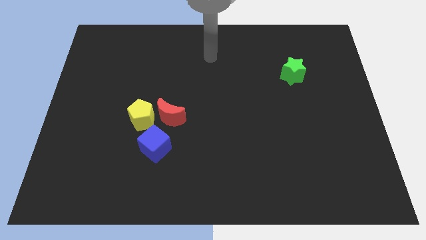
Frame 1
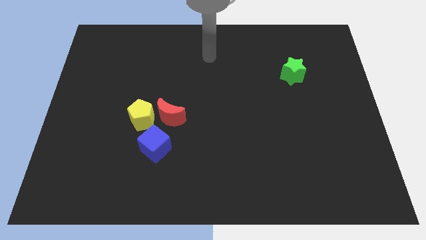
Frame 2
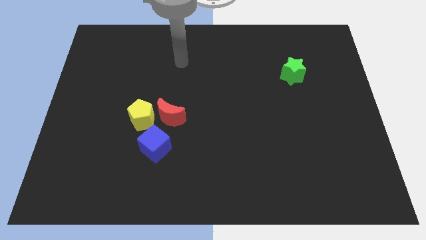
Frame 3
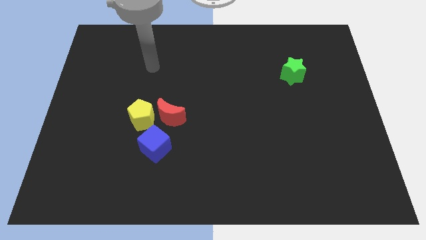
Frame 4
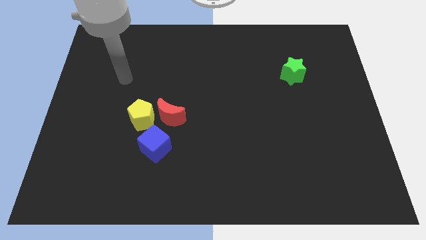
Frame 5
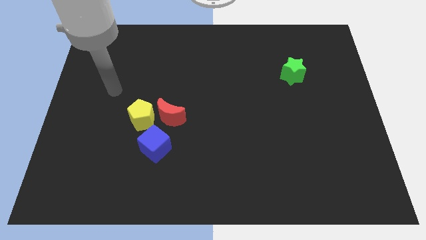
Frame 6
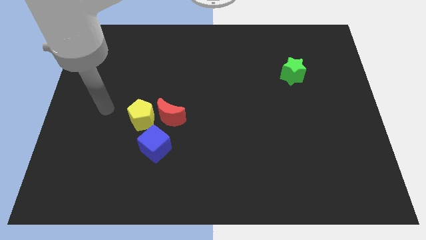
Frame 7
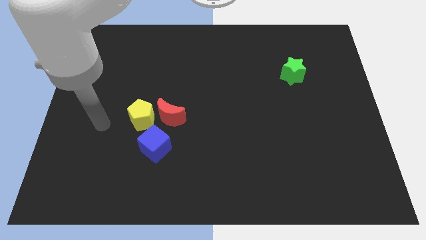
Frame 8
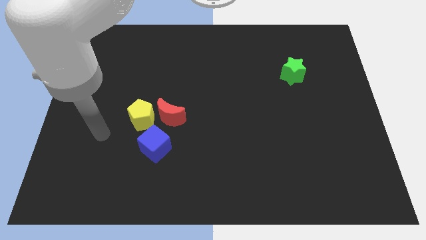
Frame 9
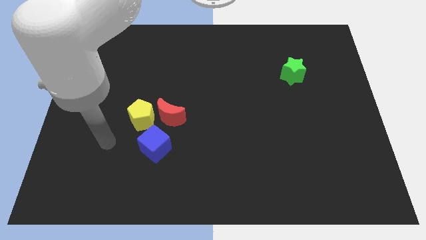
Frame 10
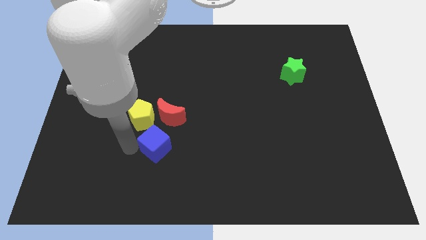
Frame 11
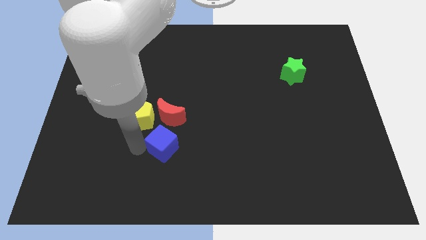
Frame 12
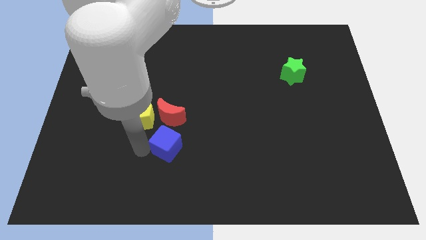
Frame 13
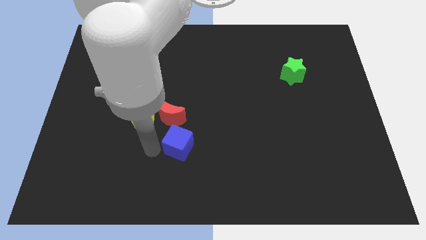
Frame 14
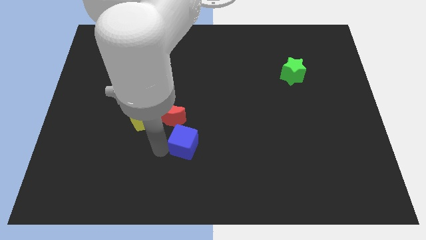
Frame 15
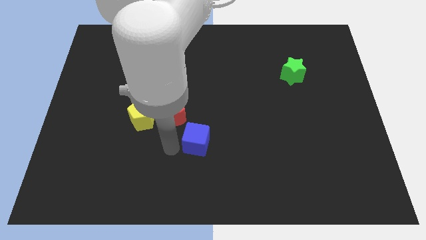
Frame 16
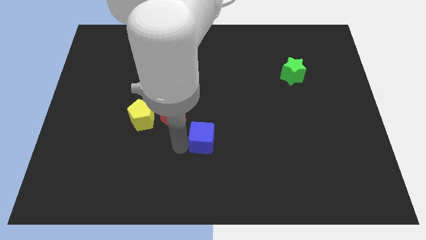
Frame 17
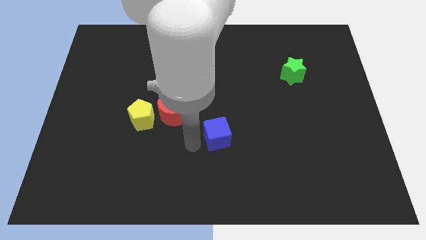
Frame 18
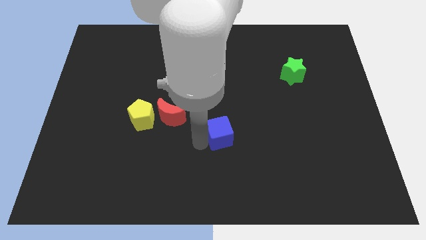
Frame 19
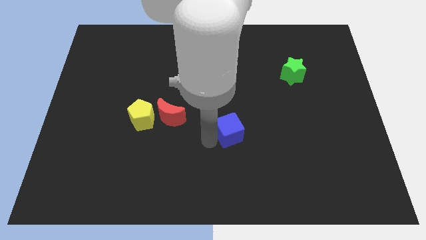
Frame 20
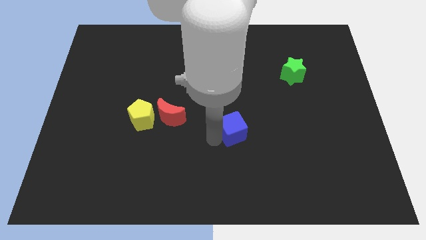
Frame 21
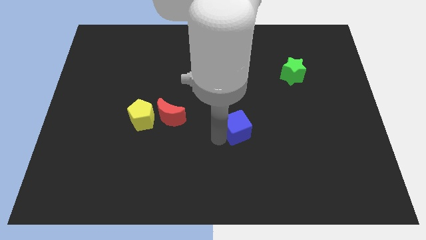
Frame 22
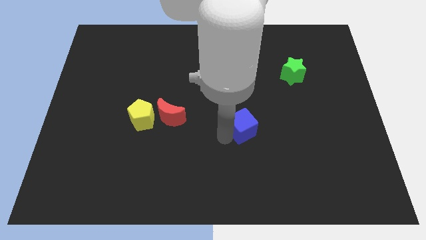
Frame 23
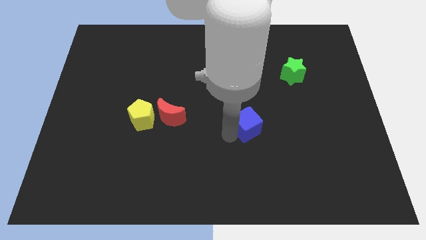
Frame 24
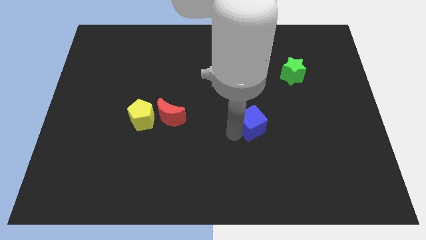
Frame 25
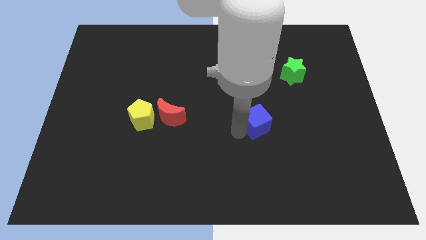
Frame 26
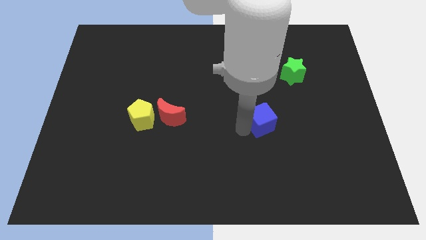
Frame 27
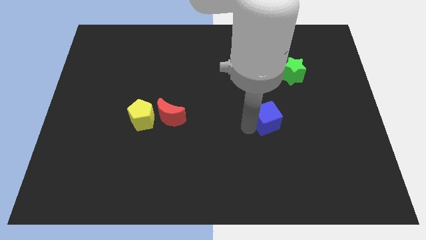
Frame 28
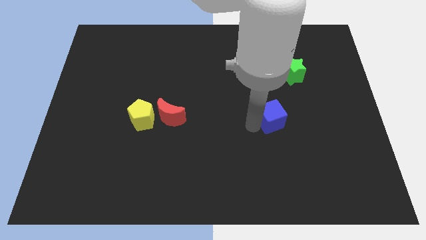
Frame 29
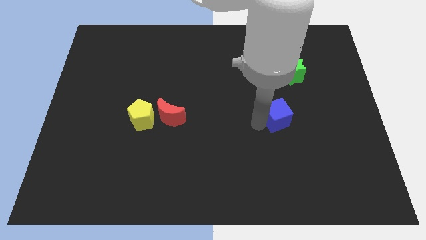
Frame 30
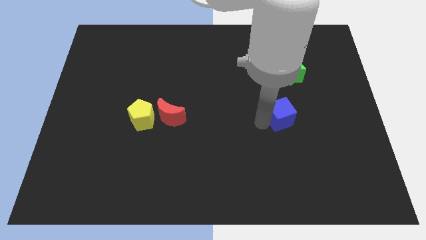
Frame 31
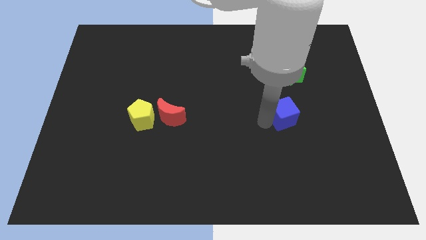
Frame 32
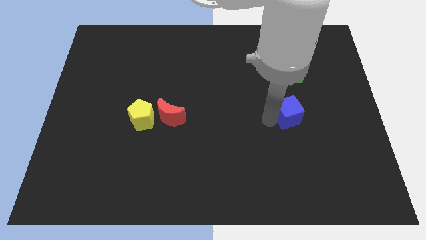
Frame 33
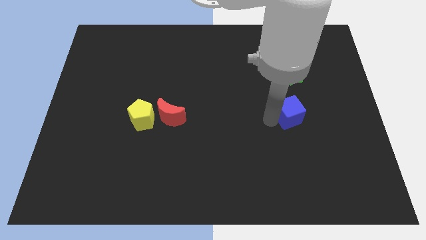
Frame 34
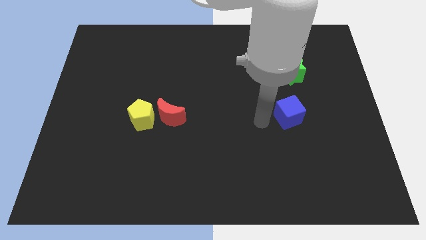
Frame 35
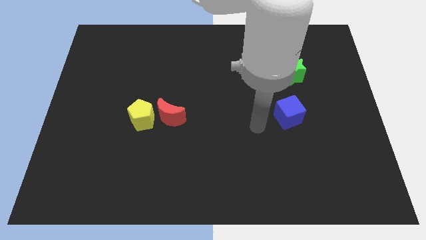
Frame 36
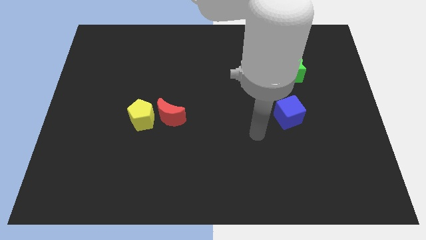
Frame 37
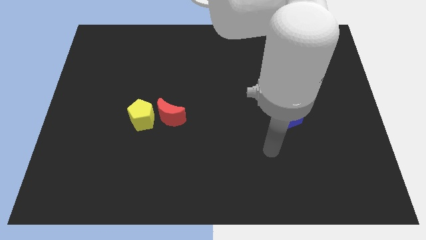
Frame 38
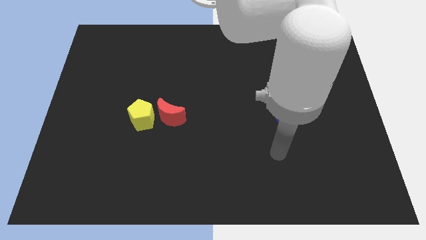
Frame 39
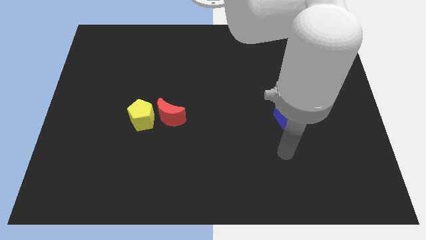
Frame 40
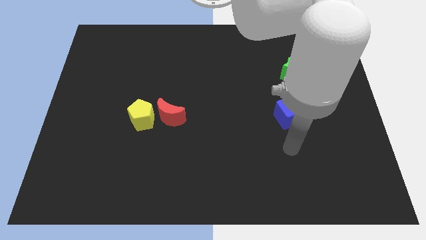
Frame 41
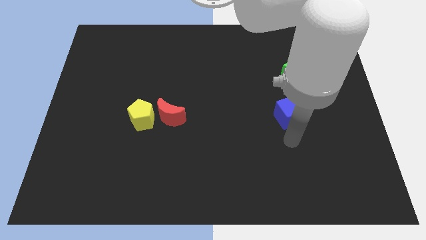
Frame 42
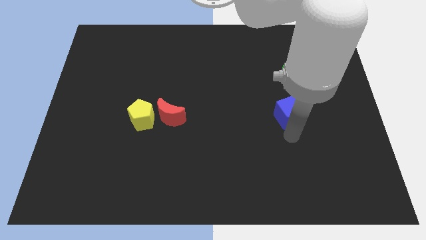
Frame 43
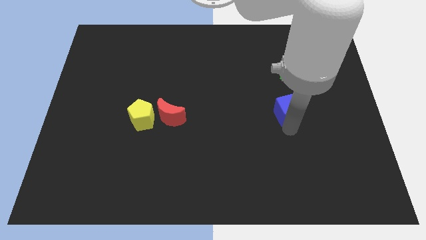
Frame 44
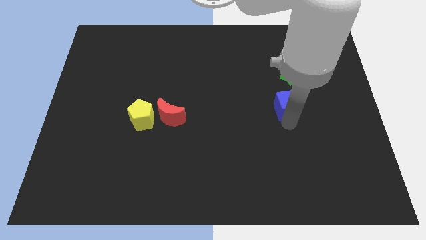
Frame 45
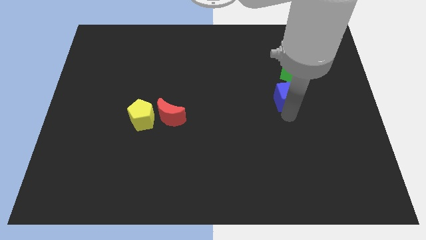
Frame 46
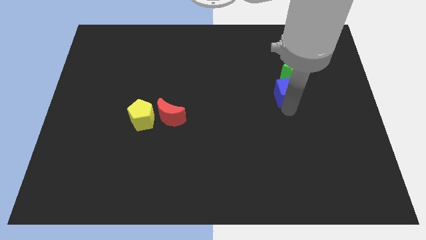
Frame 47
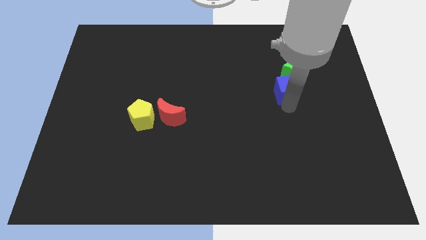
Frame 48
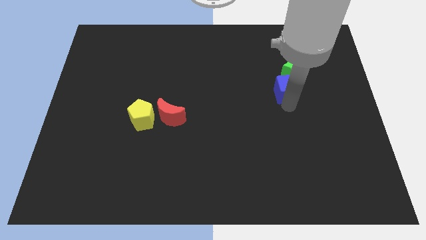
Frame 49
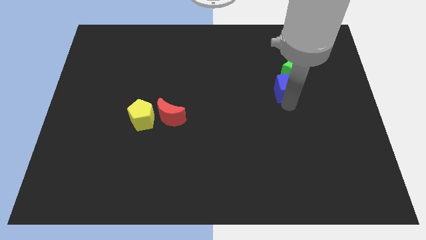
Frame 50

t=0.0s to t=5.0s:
push the blue cube close to the green block

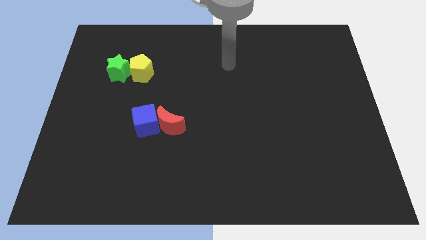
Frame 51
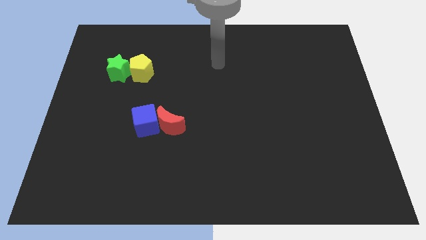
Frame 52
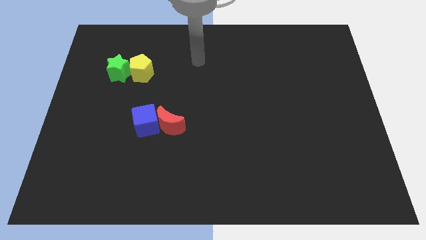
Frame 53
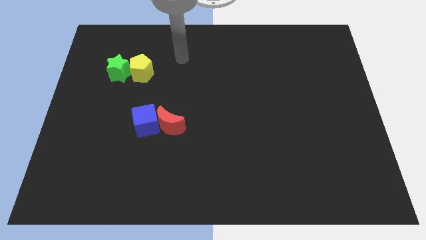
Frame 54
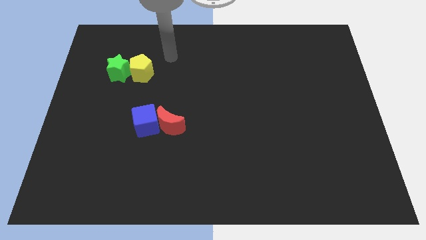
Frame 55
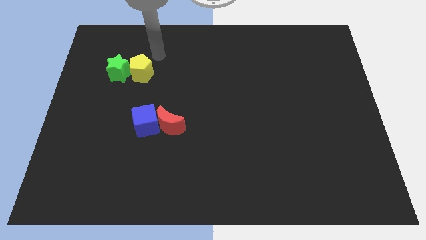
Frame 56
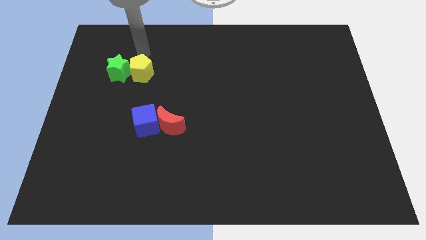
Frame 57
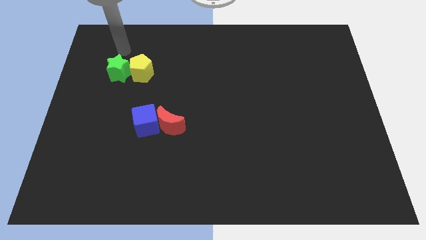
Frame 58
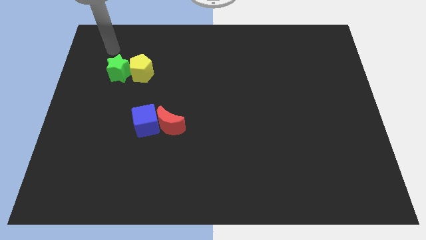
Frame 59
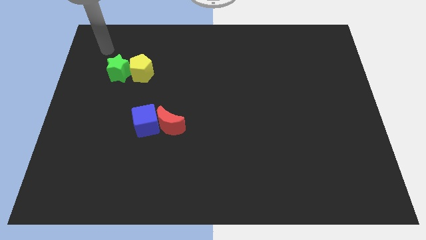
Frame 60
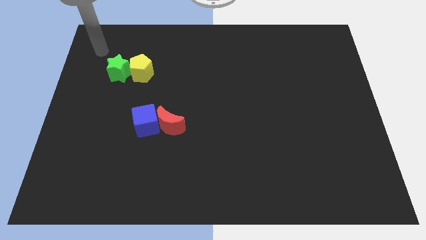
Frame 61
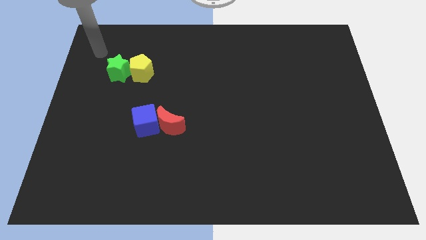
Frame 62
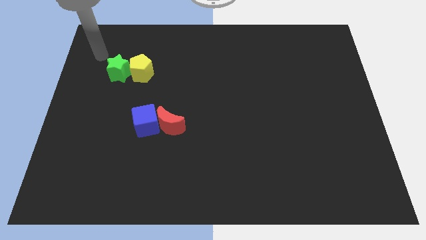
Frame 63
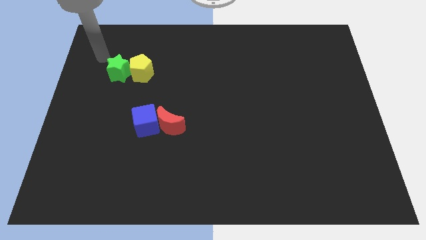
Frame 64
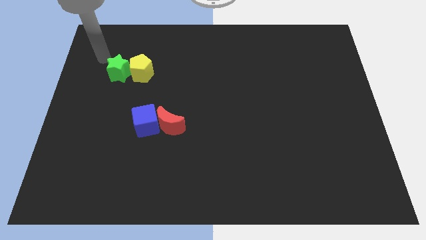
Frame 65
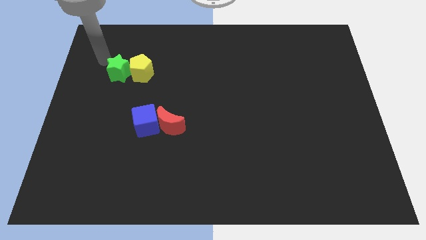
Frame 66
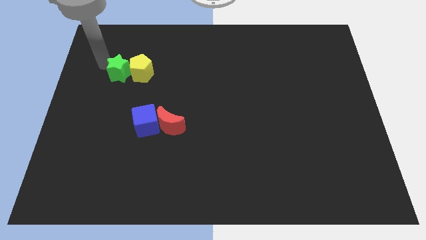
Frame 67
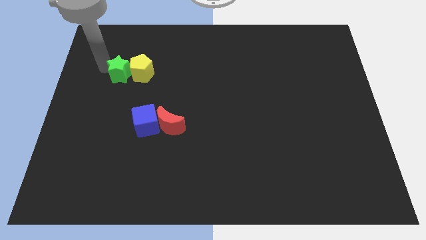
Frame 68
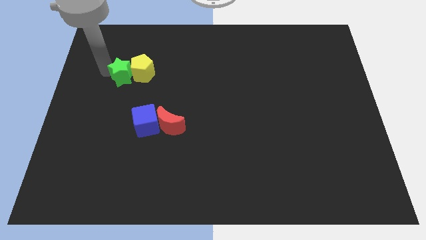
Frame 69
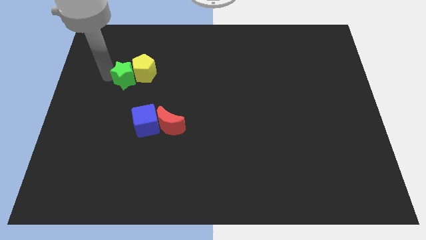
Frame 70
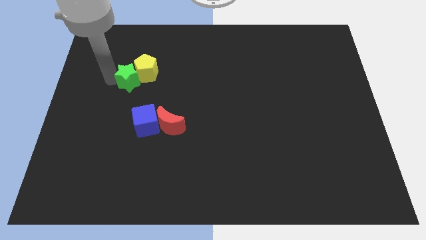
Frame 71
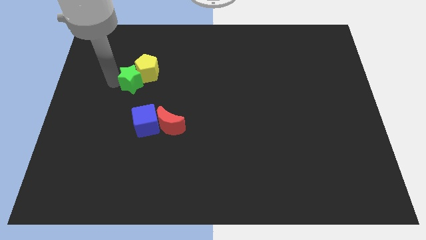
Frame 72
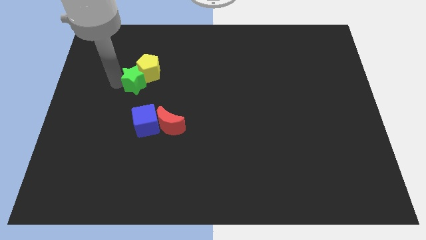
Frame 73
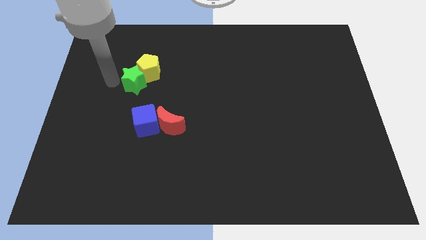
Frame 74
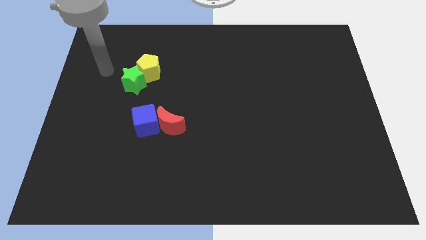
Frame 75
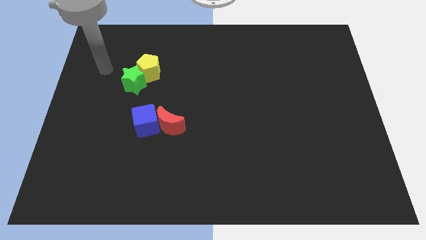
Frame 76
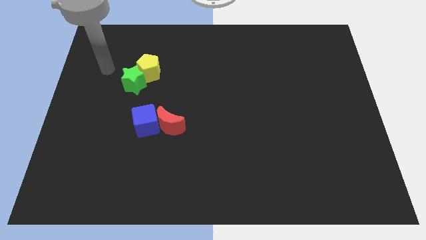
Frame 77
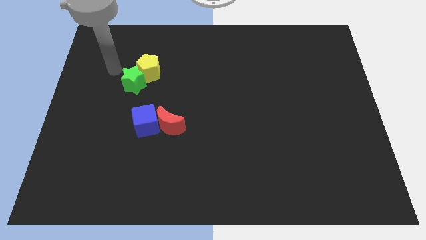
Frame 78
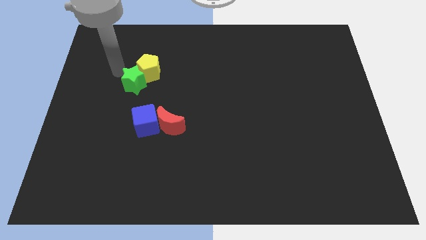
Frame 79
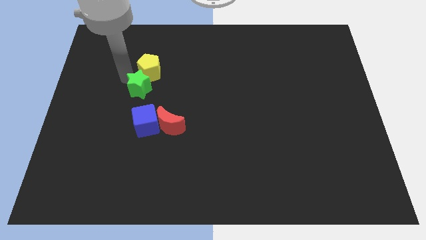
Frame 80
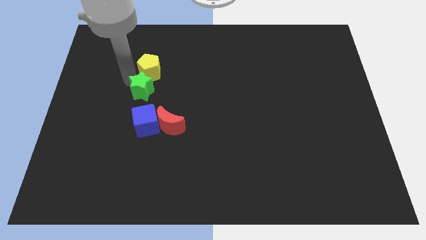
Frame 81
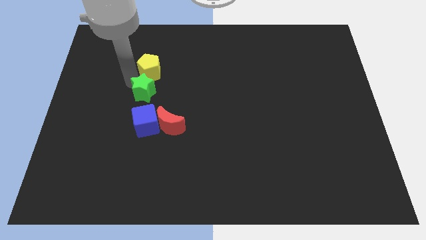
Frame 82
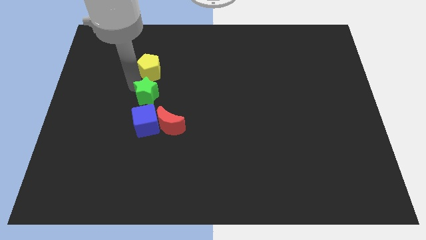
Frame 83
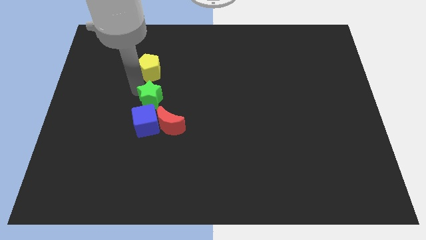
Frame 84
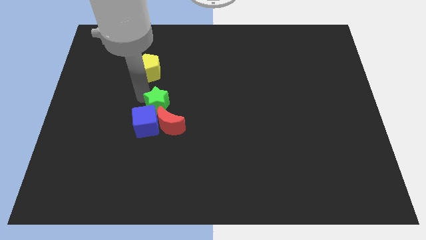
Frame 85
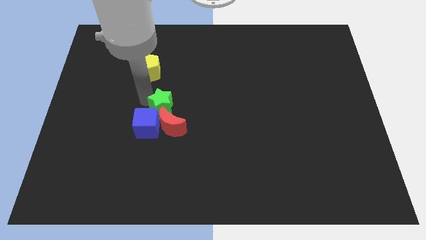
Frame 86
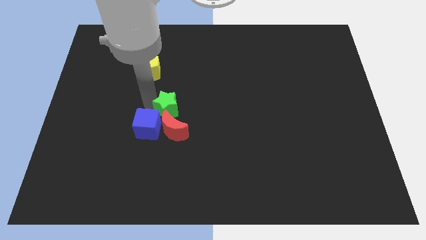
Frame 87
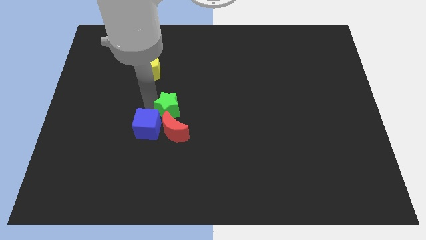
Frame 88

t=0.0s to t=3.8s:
put the green star to the moon
